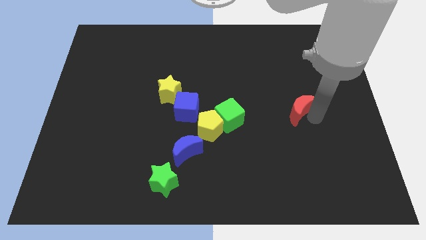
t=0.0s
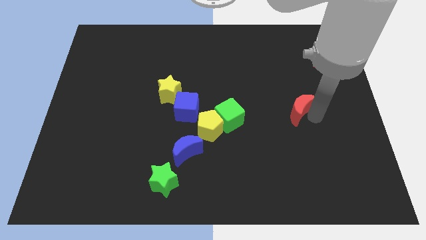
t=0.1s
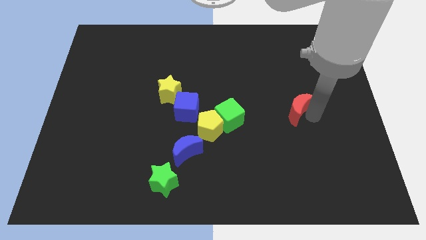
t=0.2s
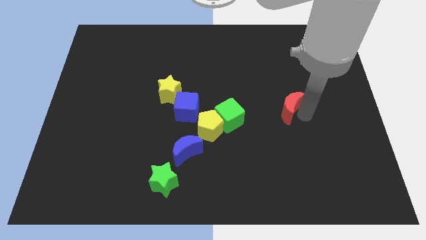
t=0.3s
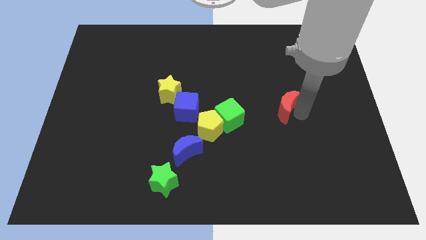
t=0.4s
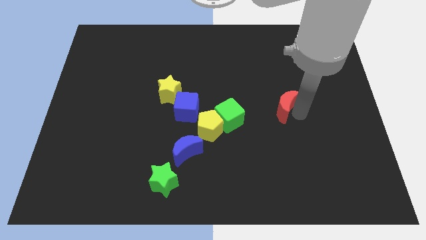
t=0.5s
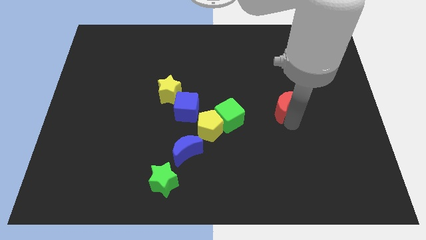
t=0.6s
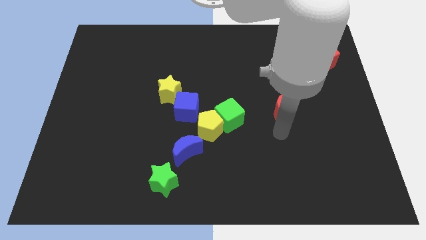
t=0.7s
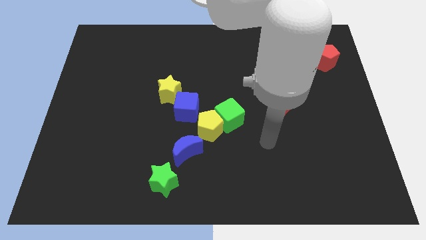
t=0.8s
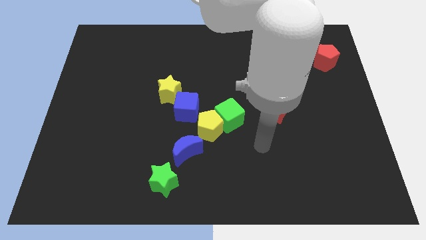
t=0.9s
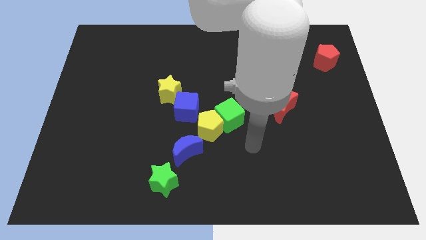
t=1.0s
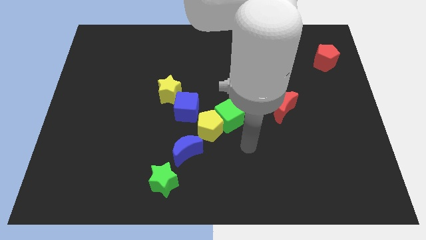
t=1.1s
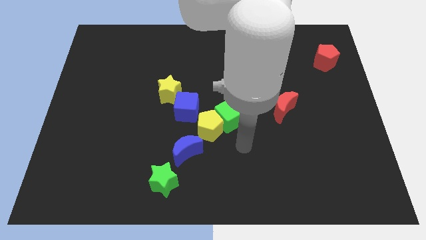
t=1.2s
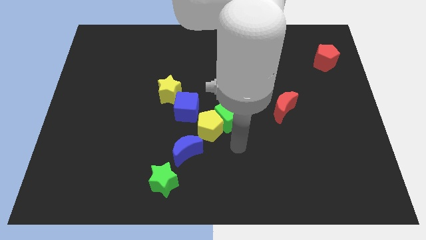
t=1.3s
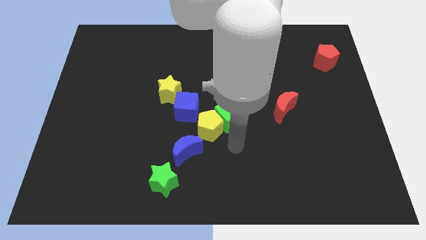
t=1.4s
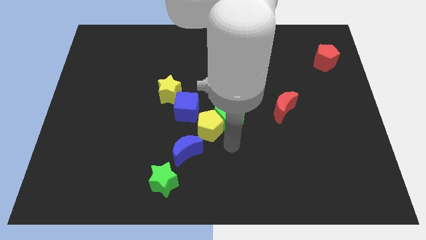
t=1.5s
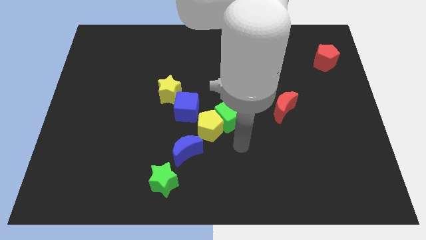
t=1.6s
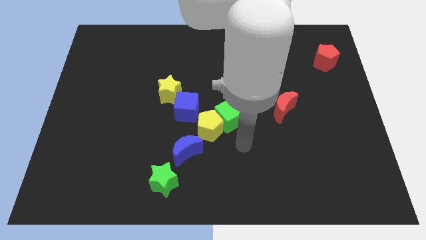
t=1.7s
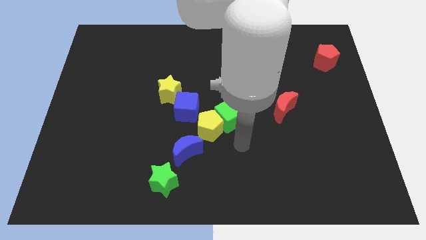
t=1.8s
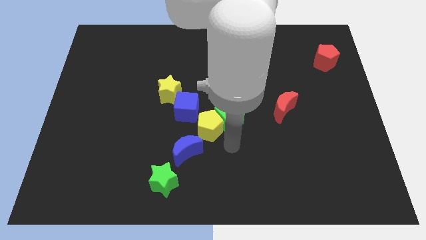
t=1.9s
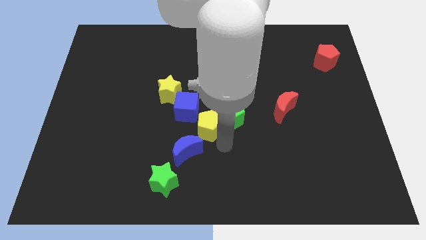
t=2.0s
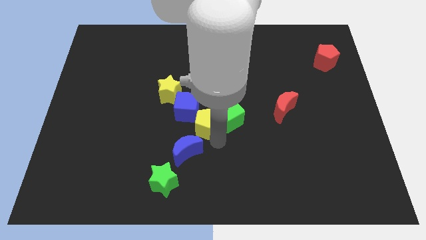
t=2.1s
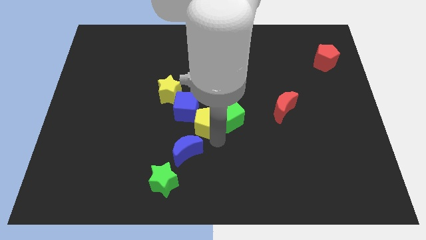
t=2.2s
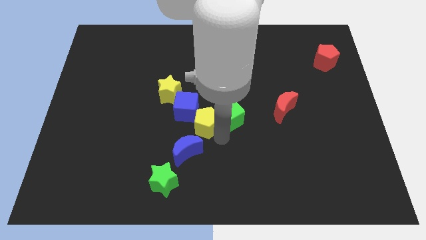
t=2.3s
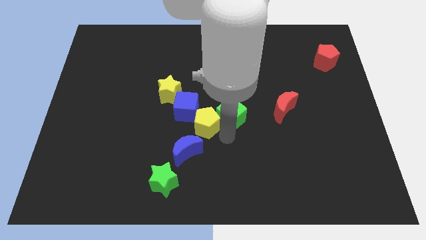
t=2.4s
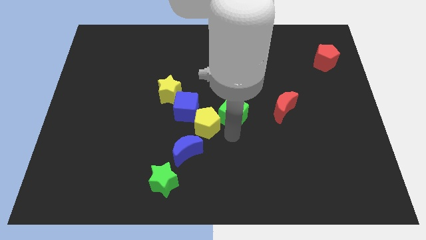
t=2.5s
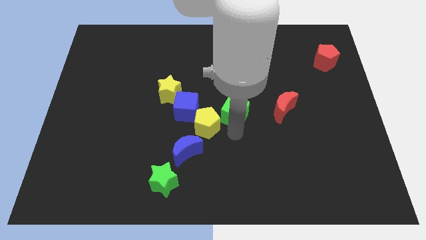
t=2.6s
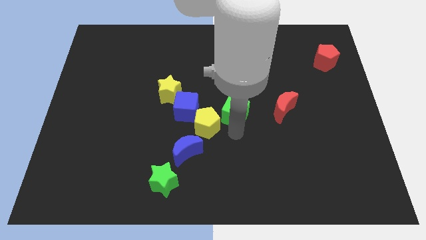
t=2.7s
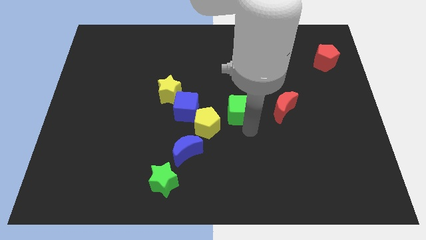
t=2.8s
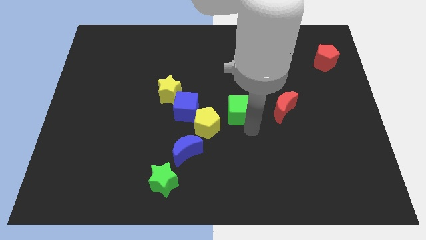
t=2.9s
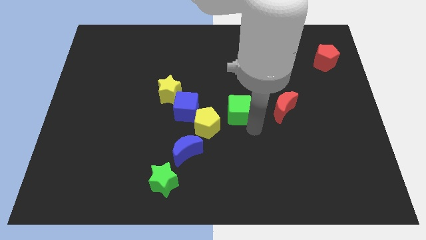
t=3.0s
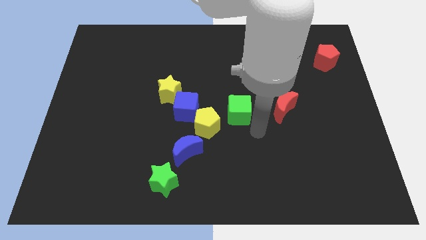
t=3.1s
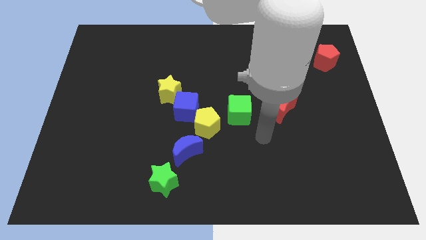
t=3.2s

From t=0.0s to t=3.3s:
separate the green cube and yellow pentagon

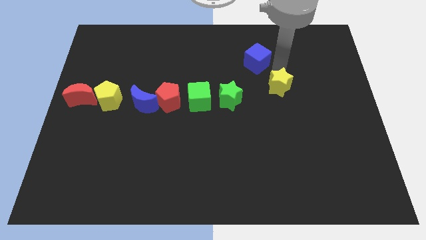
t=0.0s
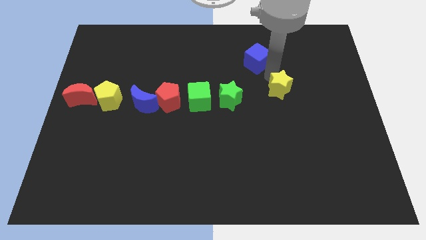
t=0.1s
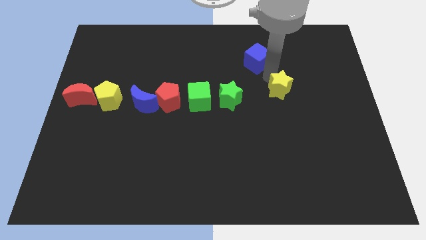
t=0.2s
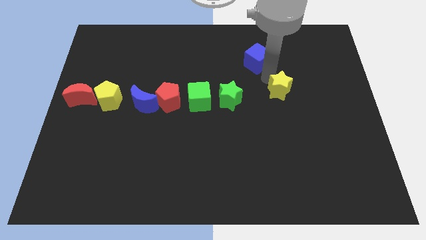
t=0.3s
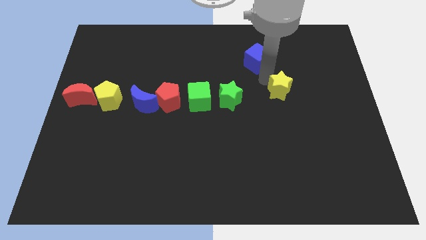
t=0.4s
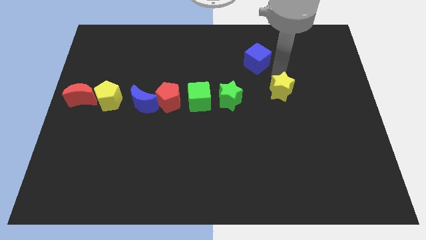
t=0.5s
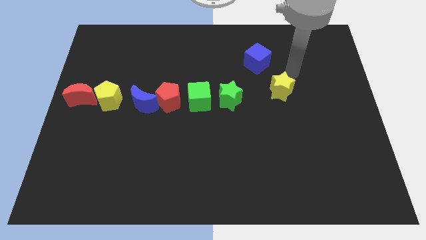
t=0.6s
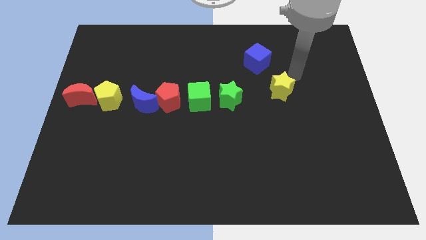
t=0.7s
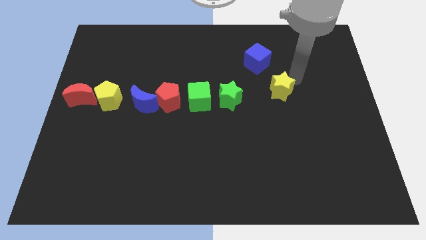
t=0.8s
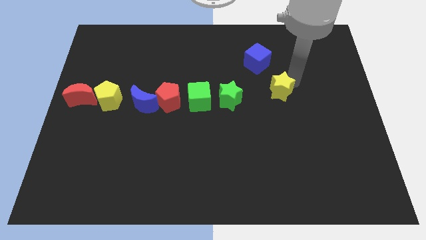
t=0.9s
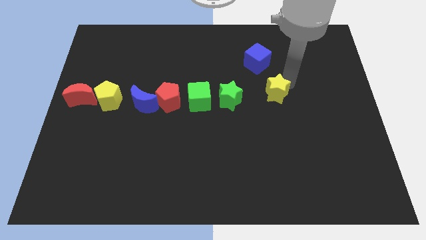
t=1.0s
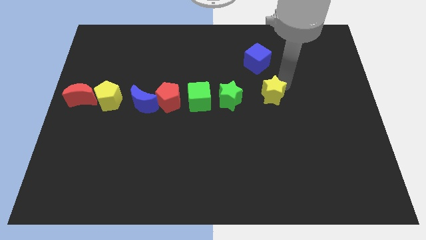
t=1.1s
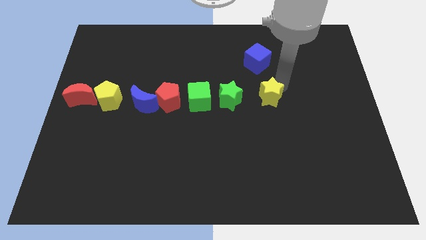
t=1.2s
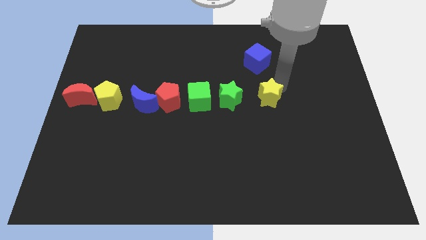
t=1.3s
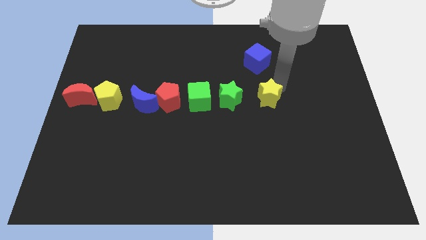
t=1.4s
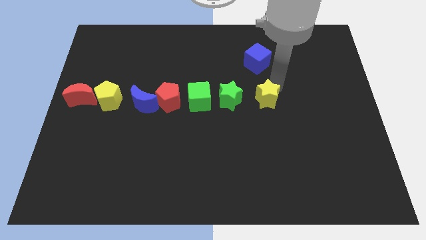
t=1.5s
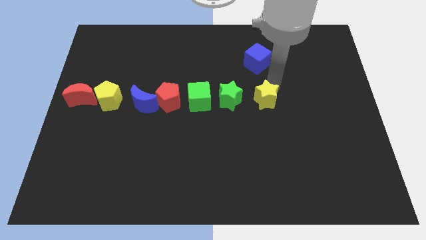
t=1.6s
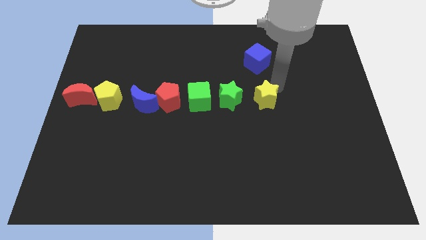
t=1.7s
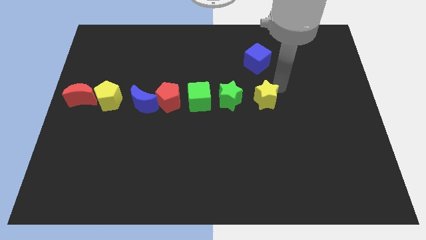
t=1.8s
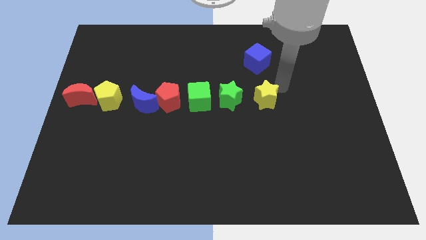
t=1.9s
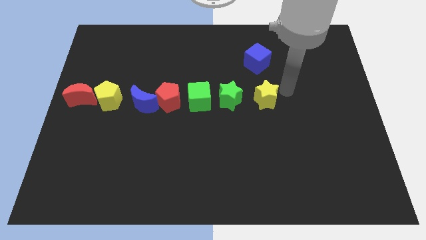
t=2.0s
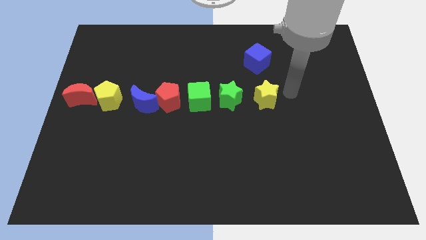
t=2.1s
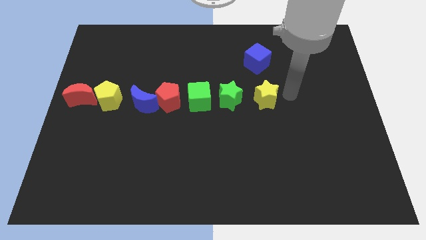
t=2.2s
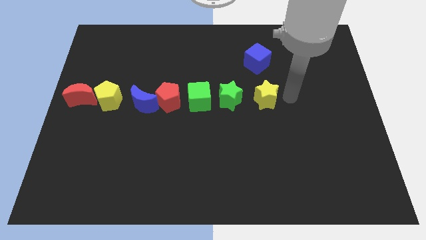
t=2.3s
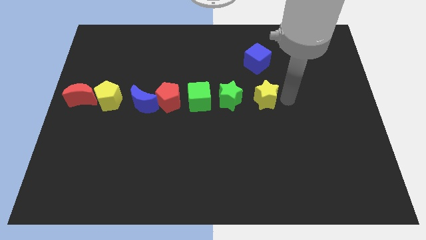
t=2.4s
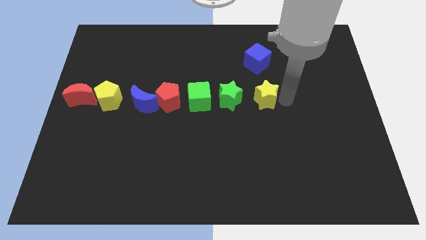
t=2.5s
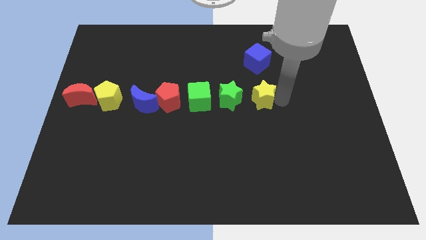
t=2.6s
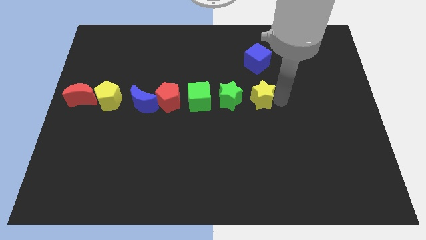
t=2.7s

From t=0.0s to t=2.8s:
move the yellow star to the right of the green star

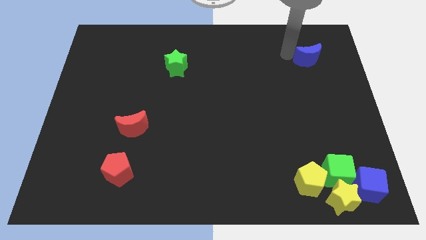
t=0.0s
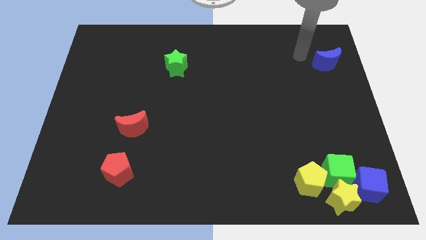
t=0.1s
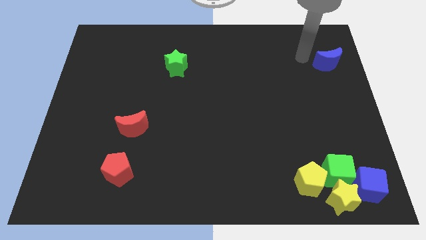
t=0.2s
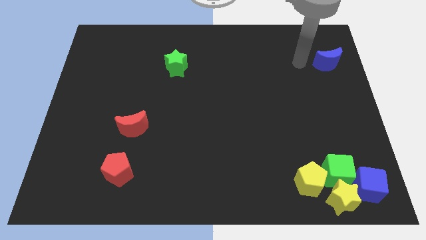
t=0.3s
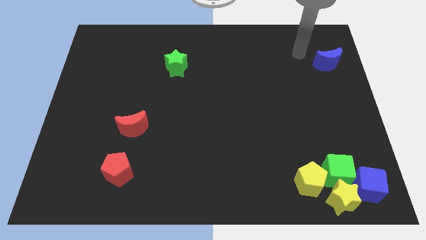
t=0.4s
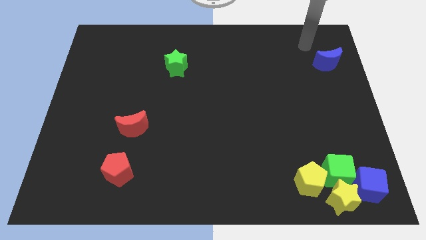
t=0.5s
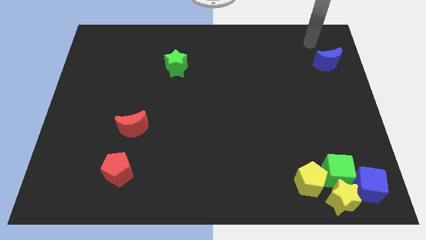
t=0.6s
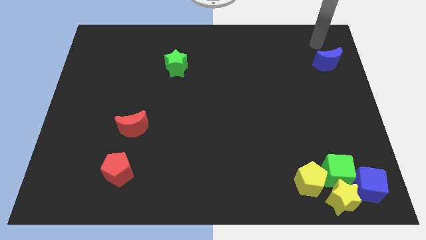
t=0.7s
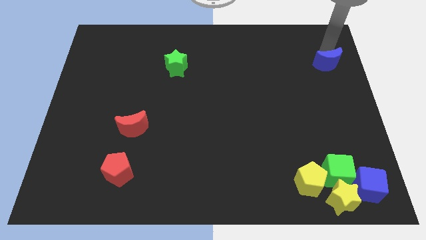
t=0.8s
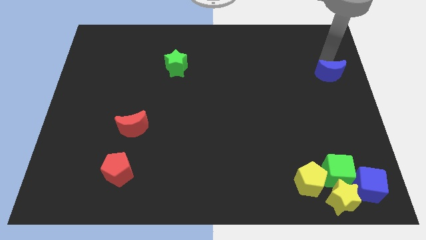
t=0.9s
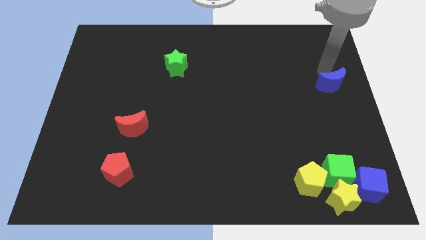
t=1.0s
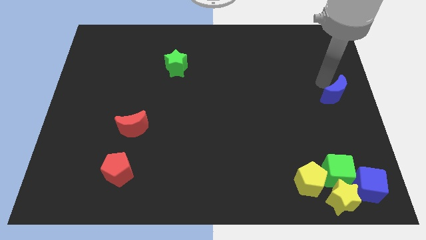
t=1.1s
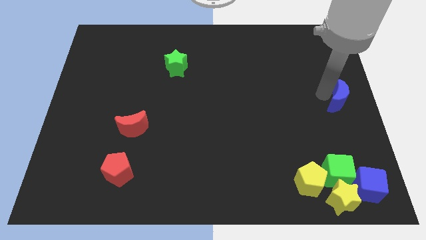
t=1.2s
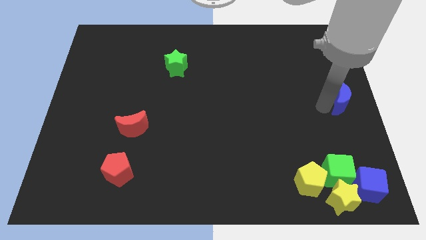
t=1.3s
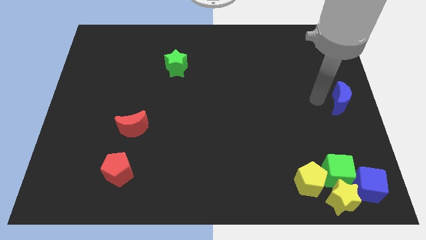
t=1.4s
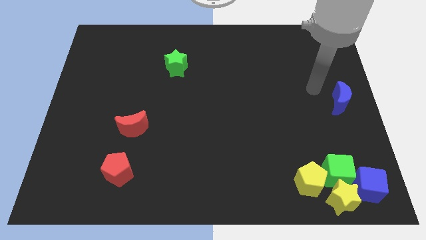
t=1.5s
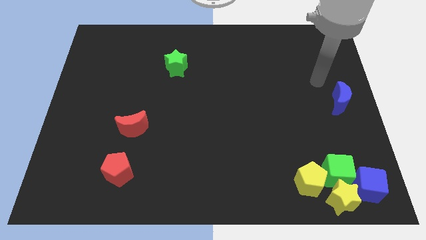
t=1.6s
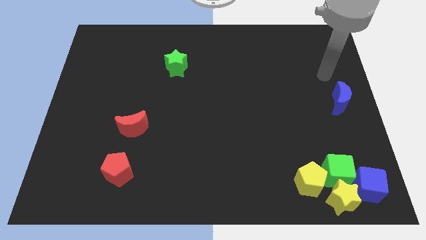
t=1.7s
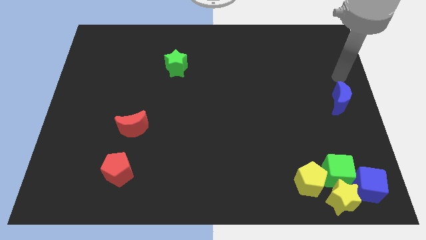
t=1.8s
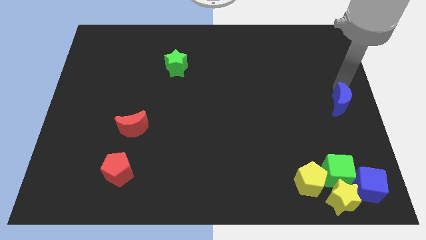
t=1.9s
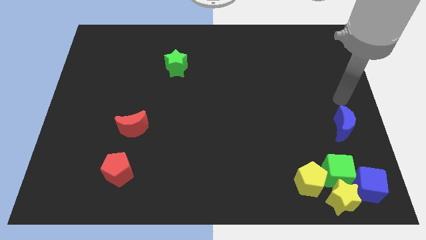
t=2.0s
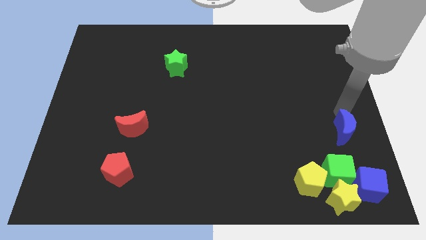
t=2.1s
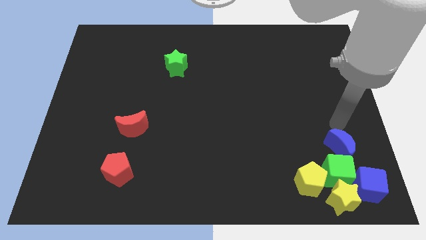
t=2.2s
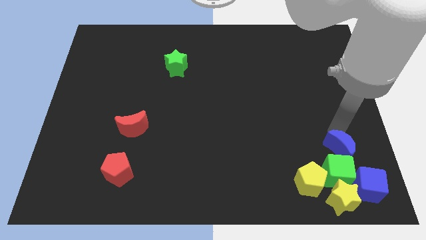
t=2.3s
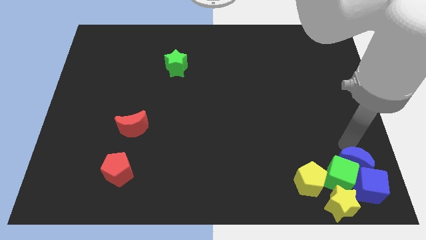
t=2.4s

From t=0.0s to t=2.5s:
move the blue crescent towards the top of green cube

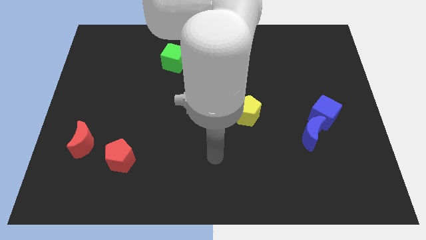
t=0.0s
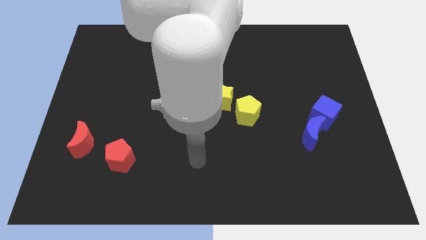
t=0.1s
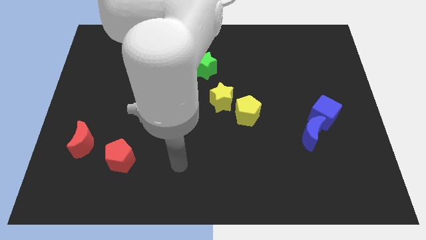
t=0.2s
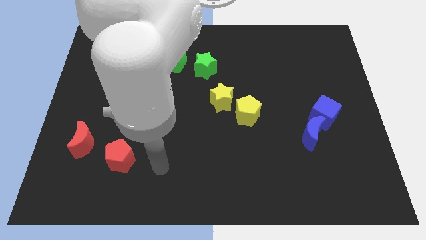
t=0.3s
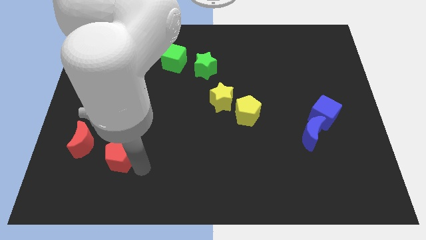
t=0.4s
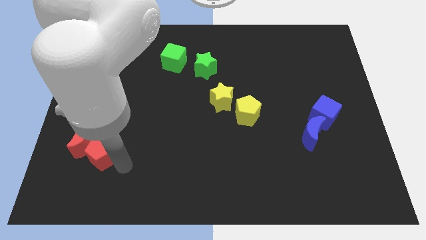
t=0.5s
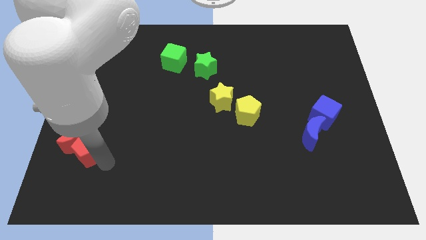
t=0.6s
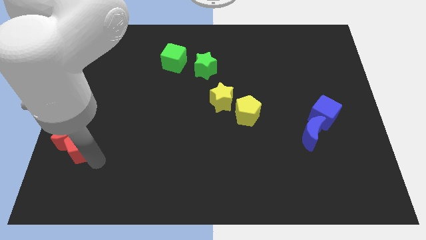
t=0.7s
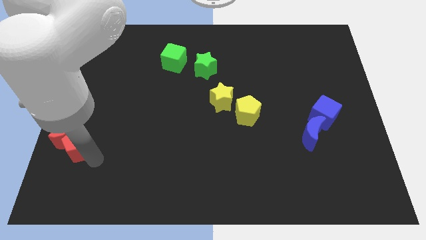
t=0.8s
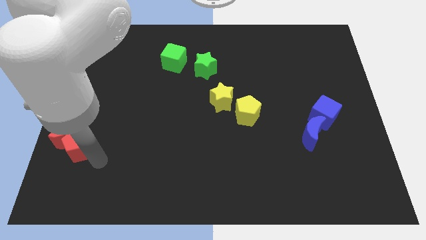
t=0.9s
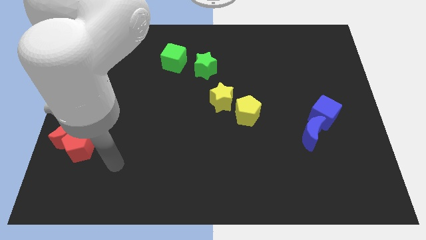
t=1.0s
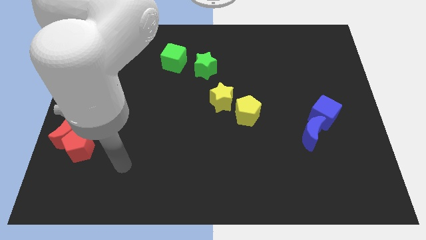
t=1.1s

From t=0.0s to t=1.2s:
push red pentagon into red crescent
